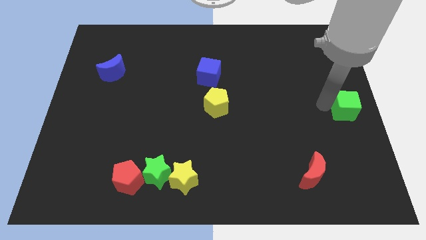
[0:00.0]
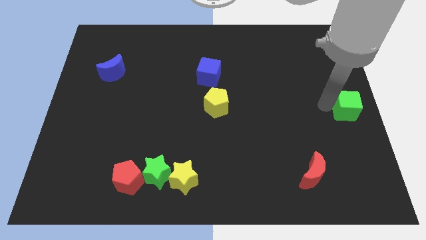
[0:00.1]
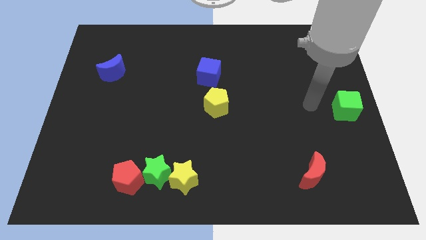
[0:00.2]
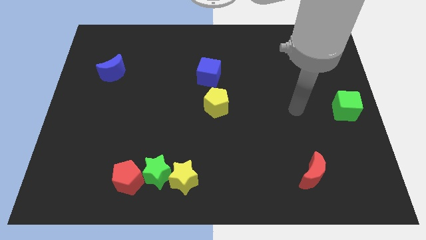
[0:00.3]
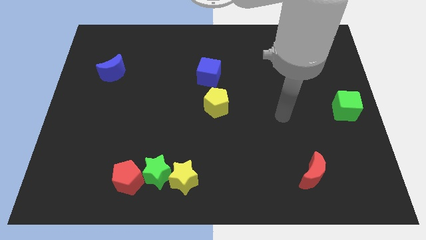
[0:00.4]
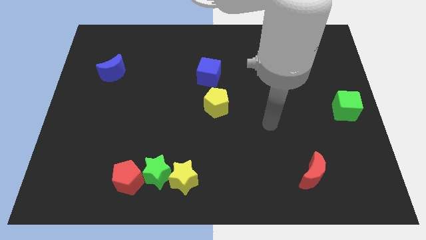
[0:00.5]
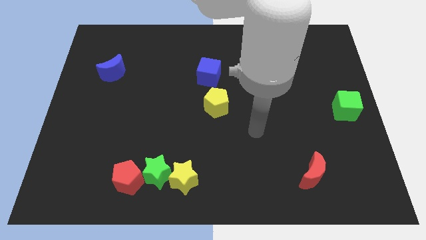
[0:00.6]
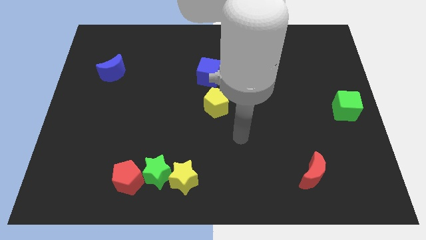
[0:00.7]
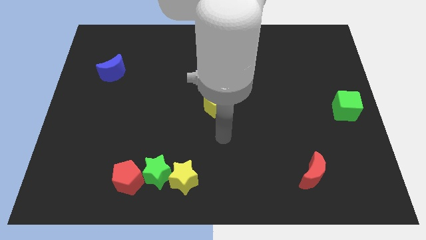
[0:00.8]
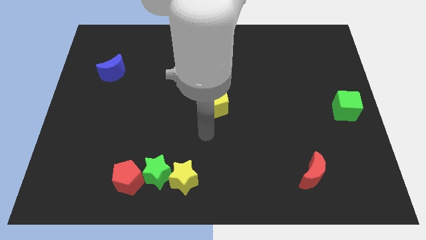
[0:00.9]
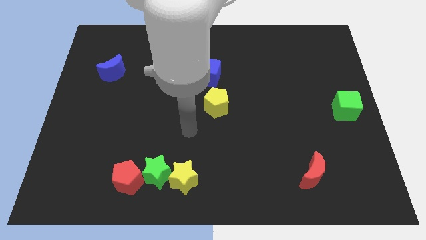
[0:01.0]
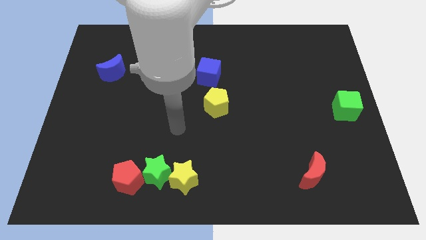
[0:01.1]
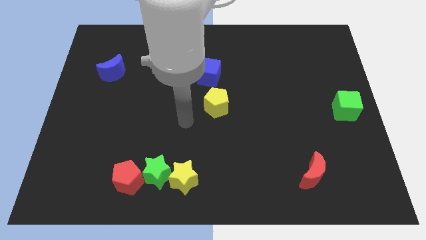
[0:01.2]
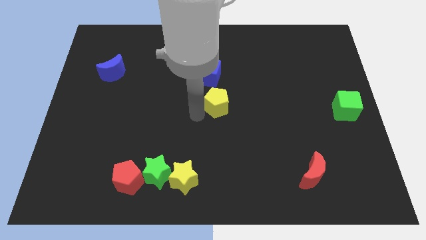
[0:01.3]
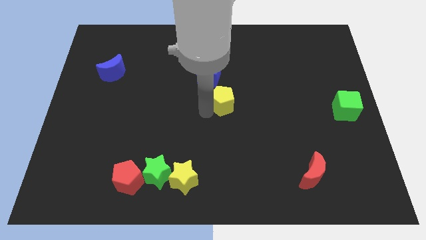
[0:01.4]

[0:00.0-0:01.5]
move your arm away from the green cube

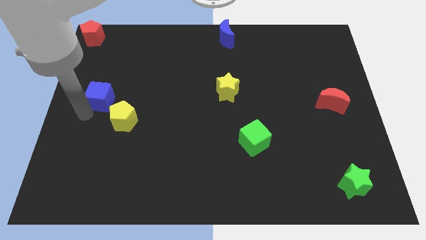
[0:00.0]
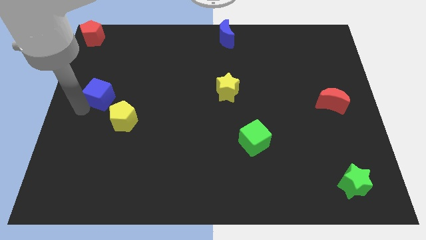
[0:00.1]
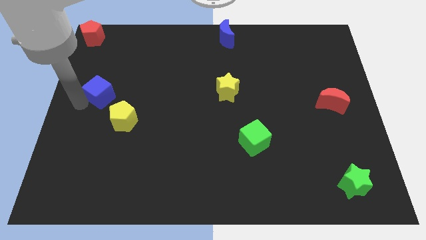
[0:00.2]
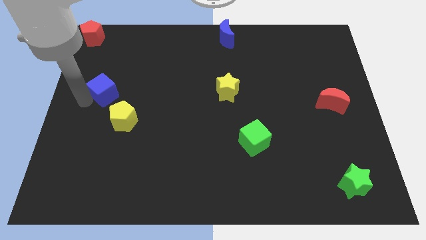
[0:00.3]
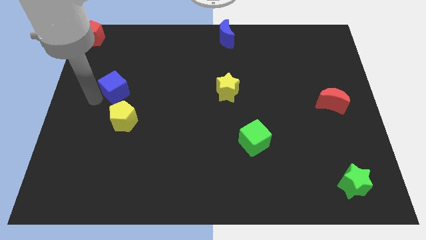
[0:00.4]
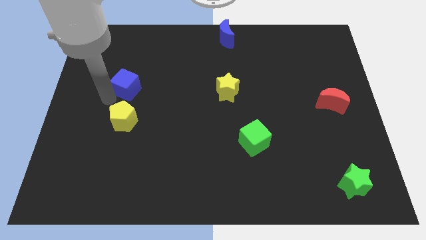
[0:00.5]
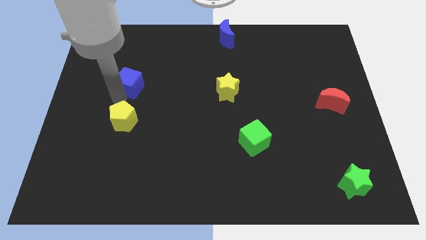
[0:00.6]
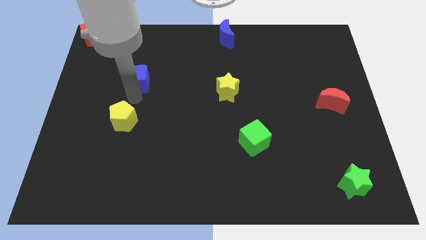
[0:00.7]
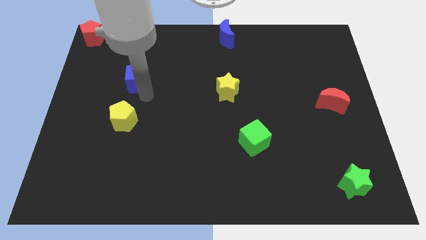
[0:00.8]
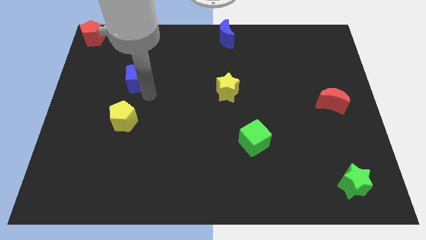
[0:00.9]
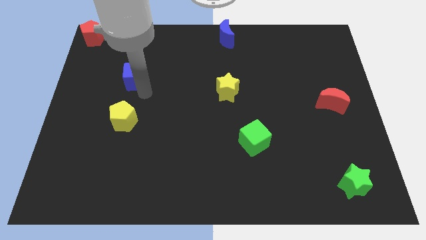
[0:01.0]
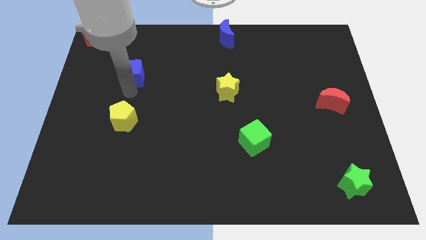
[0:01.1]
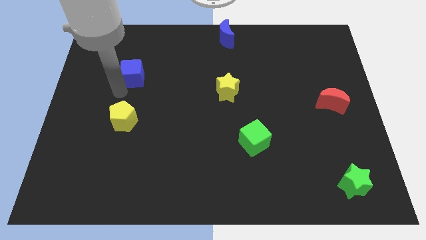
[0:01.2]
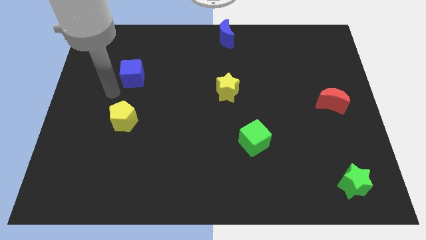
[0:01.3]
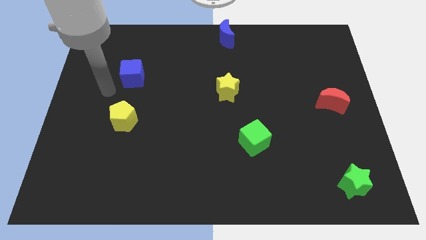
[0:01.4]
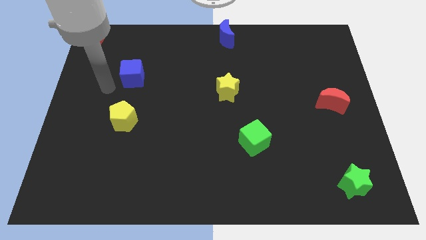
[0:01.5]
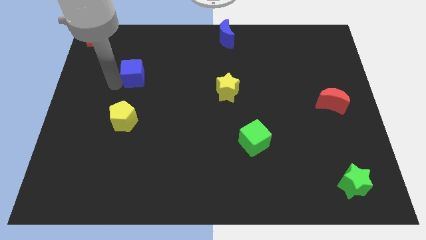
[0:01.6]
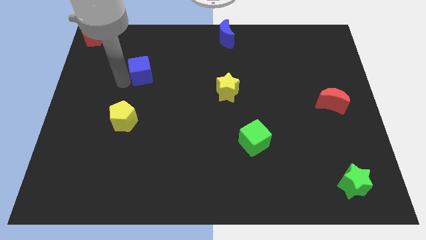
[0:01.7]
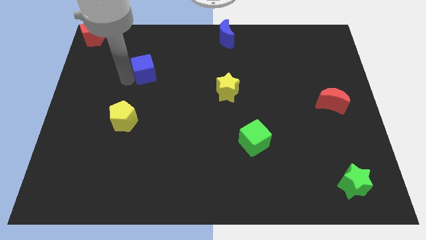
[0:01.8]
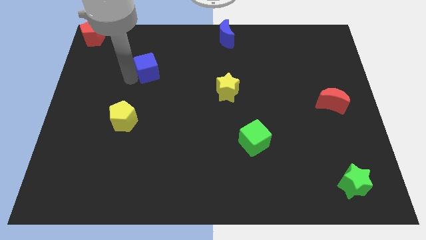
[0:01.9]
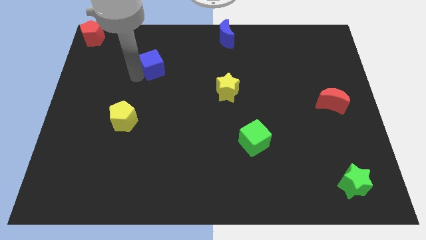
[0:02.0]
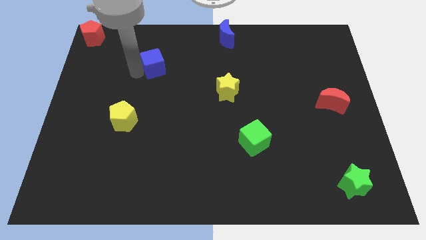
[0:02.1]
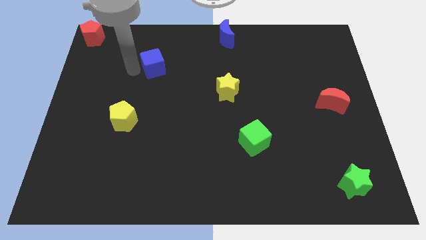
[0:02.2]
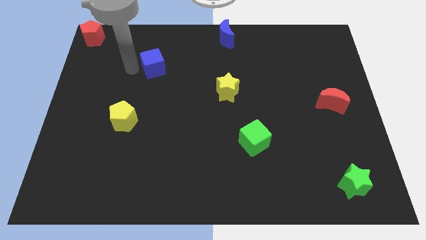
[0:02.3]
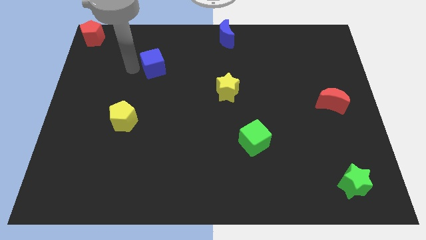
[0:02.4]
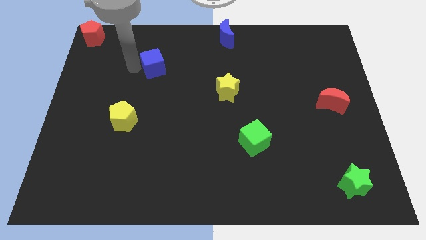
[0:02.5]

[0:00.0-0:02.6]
push the blue cube to the top

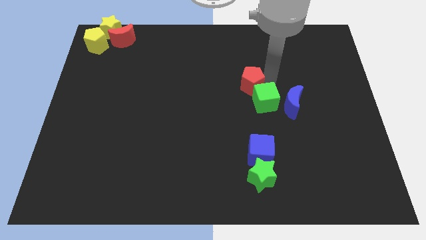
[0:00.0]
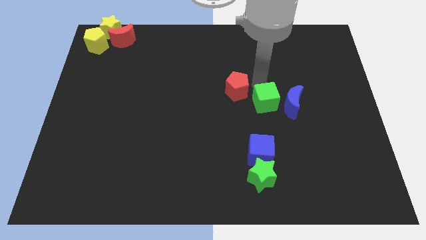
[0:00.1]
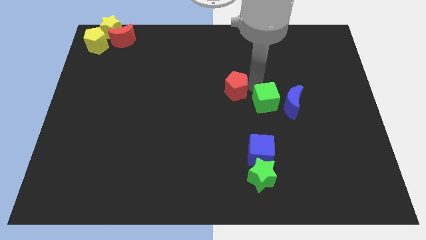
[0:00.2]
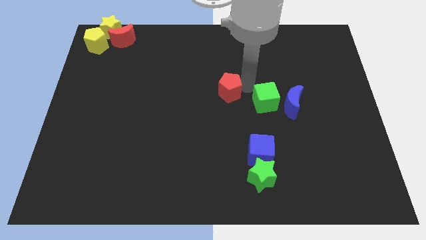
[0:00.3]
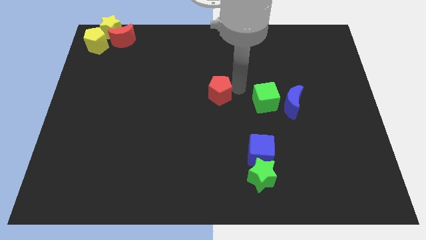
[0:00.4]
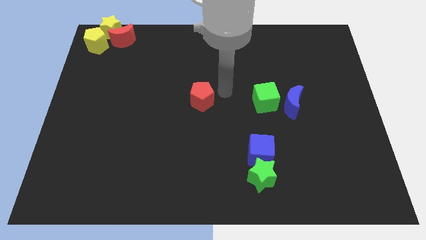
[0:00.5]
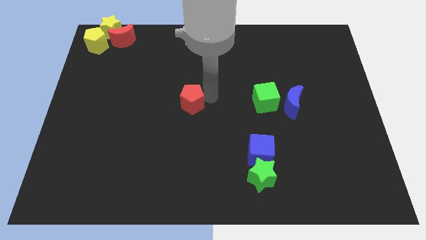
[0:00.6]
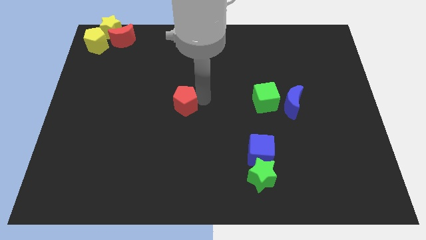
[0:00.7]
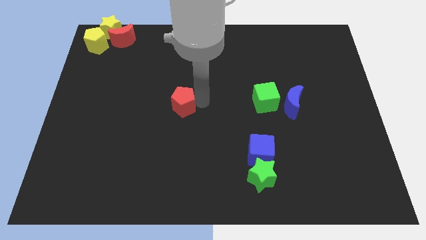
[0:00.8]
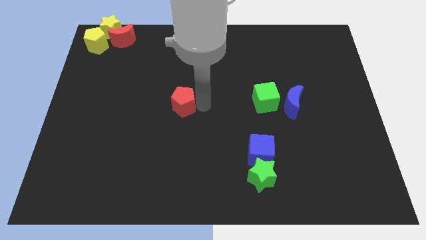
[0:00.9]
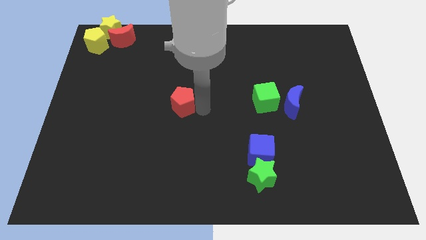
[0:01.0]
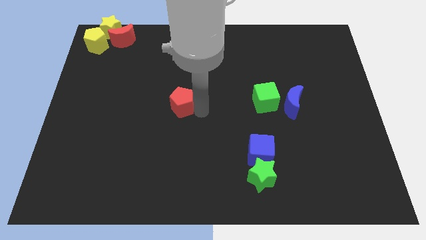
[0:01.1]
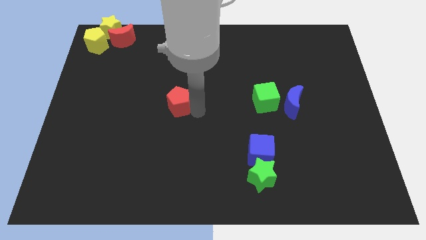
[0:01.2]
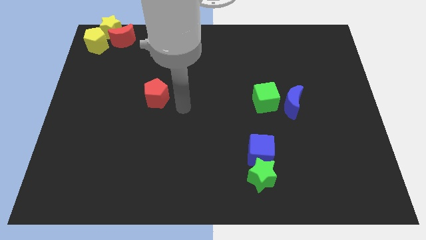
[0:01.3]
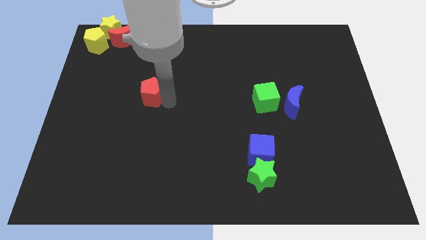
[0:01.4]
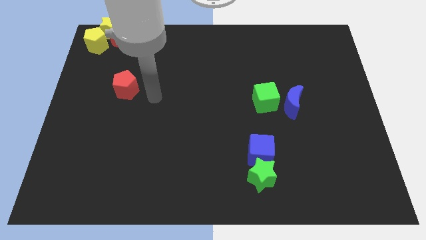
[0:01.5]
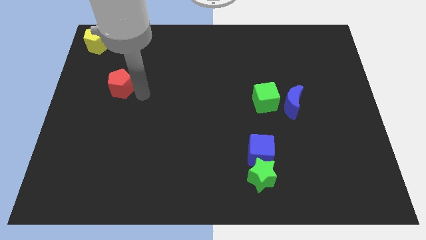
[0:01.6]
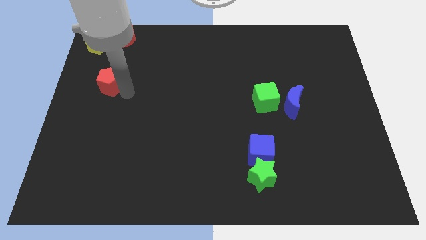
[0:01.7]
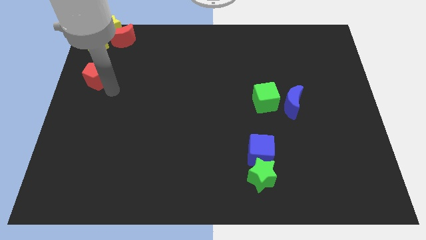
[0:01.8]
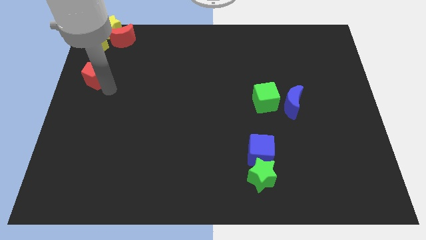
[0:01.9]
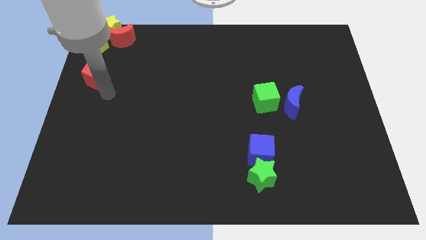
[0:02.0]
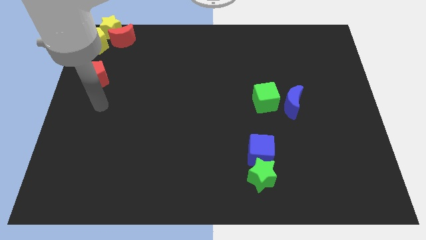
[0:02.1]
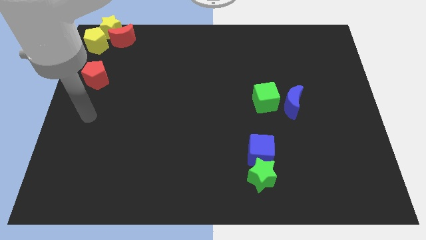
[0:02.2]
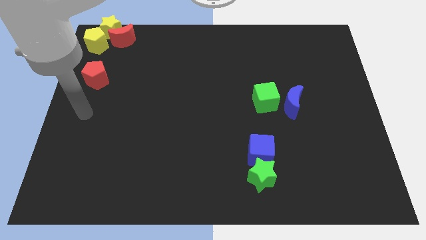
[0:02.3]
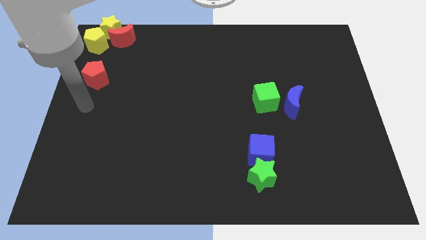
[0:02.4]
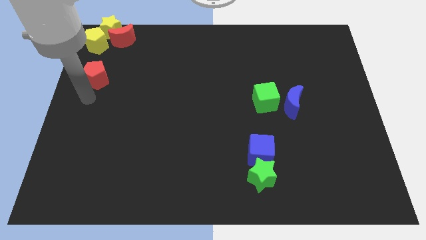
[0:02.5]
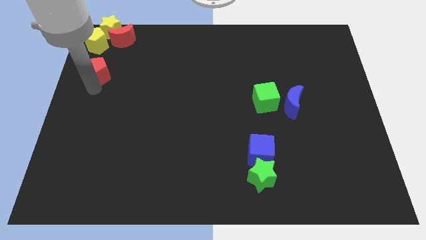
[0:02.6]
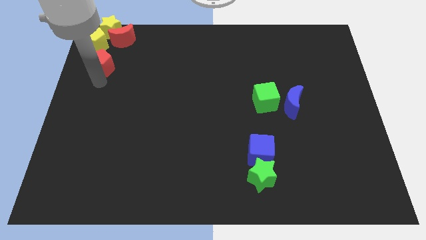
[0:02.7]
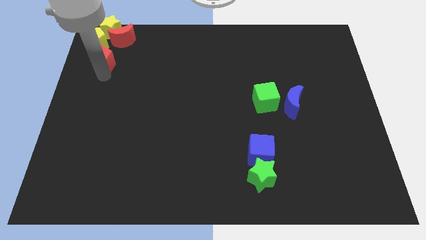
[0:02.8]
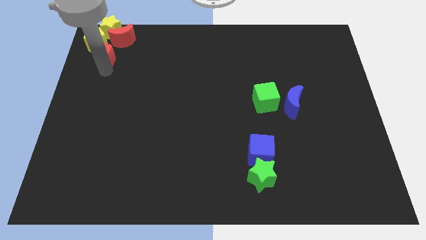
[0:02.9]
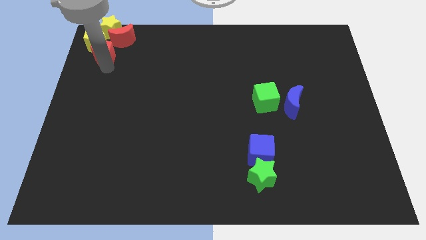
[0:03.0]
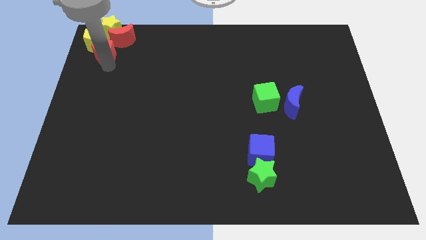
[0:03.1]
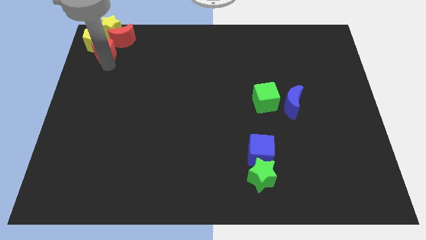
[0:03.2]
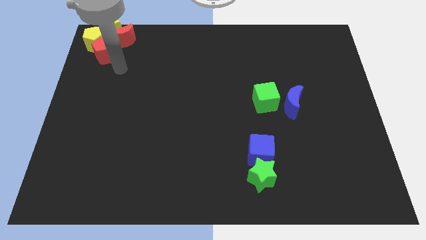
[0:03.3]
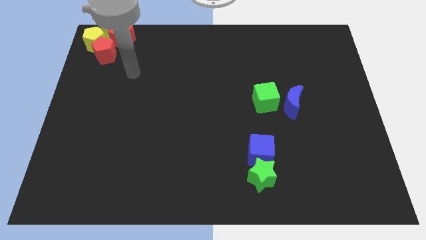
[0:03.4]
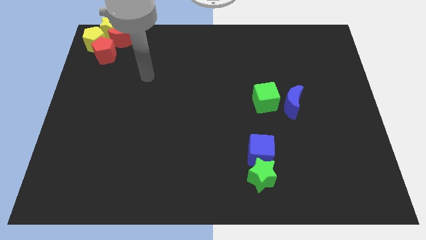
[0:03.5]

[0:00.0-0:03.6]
push the red pentagon to the bottom right side of the yellow pentagon

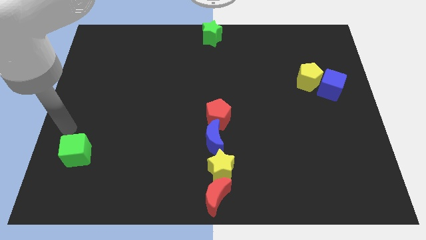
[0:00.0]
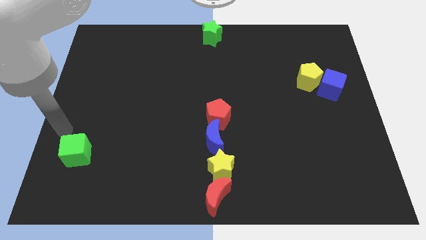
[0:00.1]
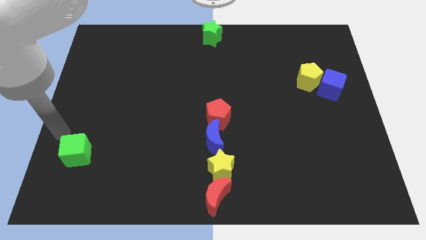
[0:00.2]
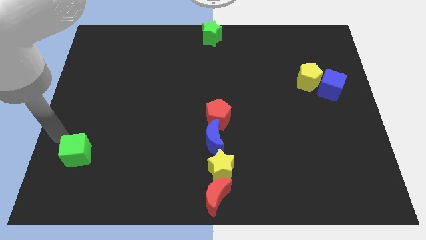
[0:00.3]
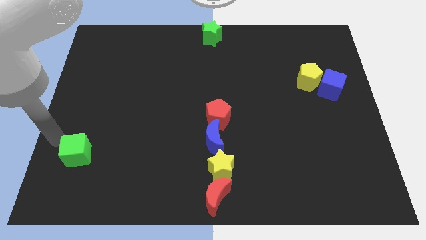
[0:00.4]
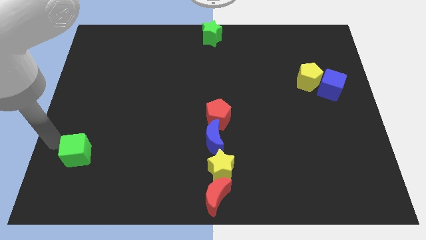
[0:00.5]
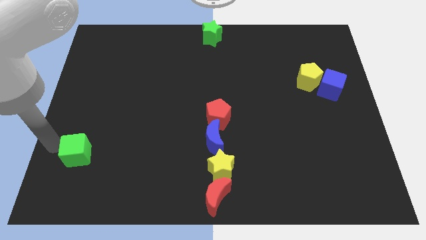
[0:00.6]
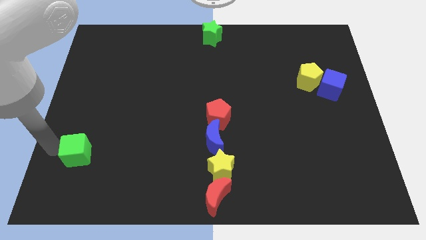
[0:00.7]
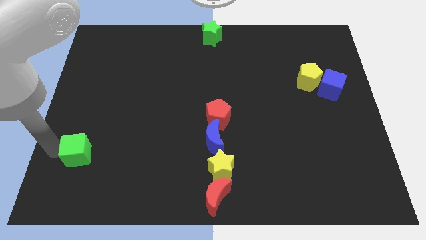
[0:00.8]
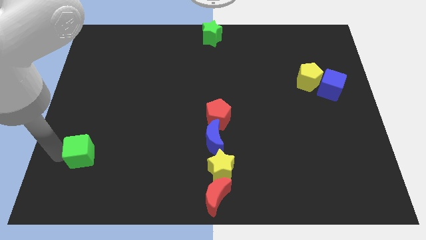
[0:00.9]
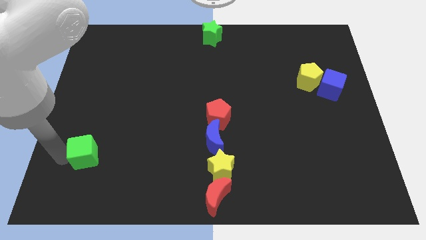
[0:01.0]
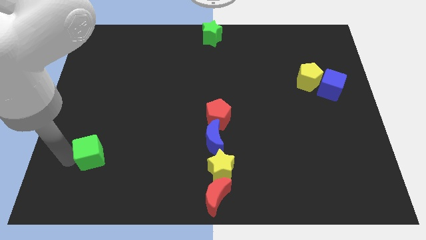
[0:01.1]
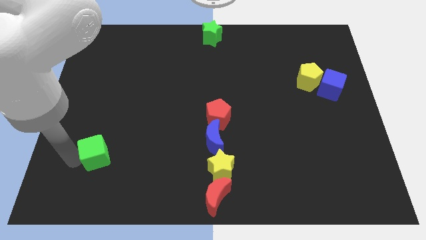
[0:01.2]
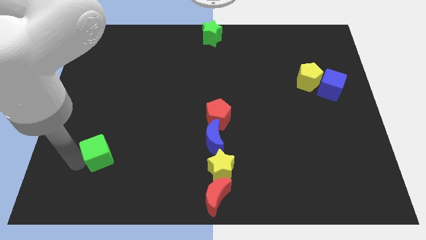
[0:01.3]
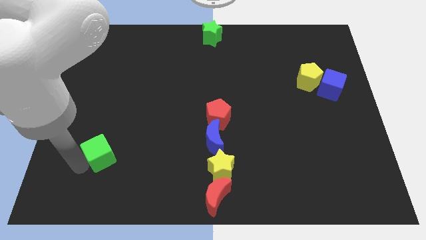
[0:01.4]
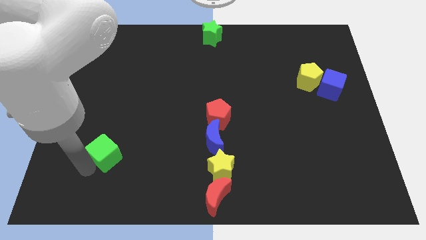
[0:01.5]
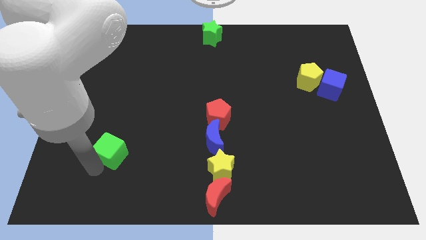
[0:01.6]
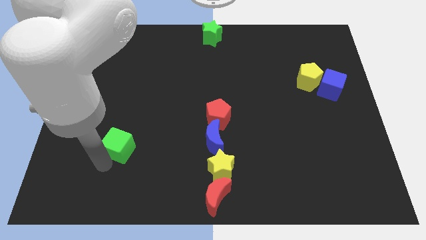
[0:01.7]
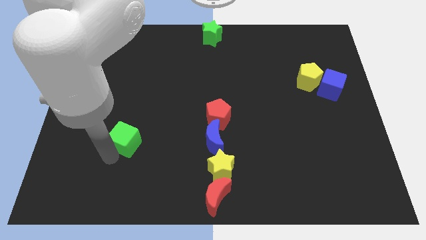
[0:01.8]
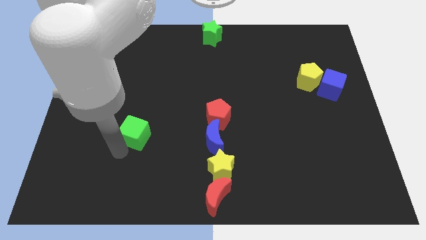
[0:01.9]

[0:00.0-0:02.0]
place the green cube to the left of the blue moon
